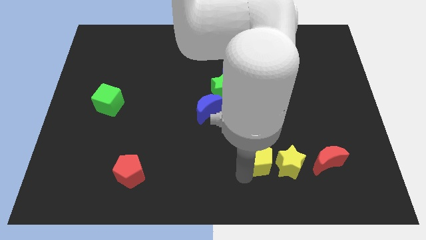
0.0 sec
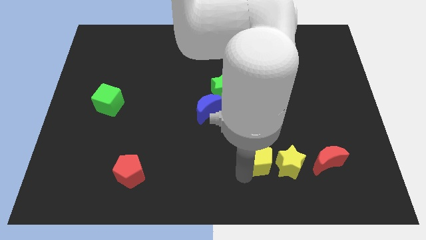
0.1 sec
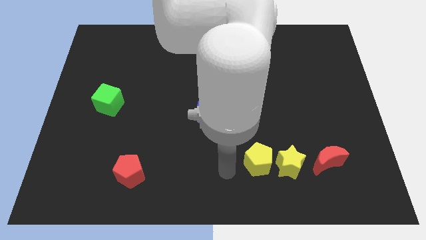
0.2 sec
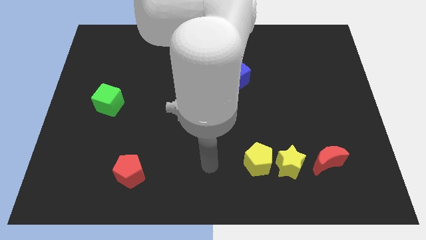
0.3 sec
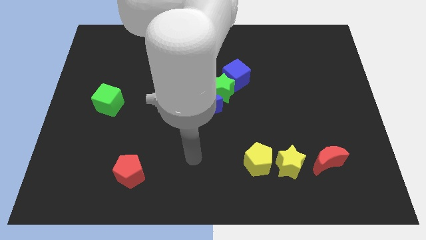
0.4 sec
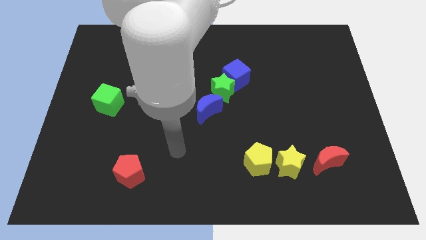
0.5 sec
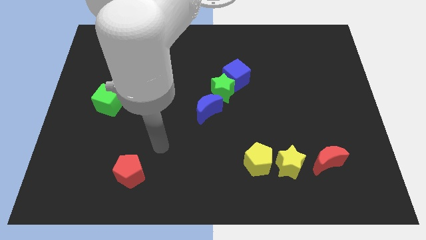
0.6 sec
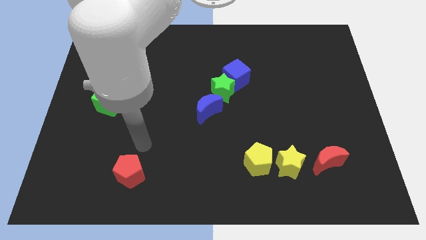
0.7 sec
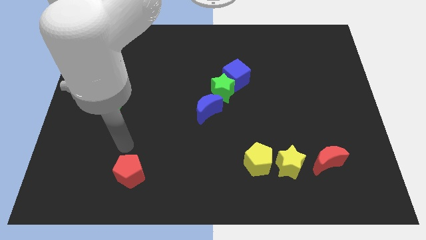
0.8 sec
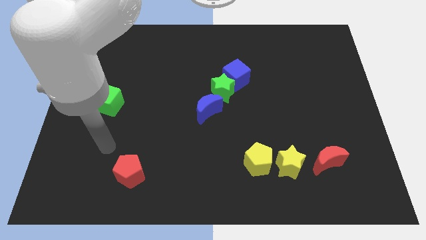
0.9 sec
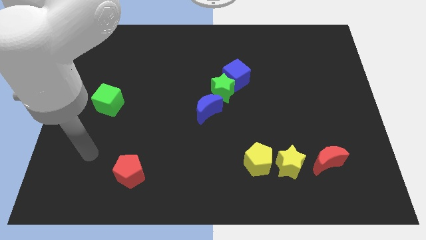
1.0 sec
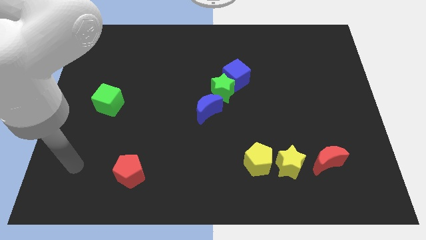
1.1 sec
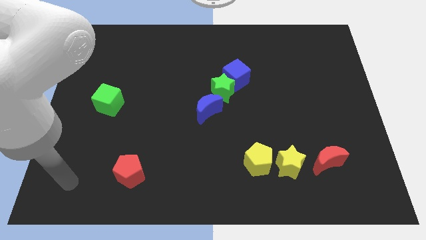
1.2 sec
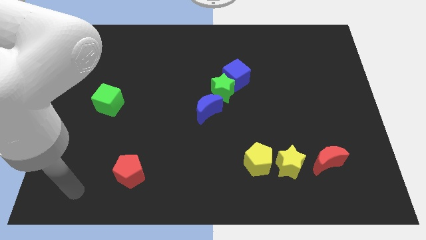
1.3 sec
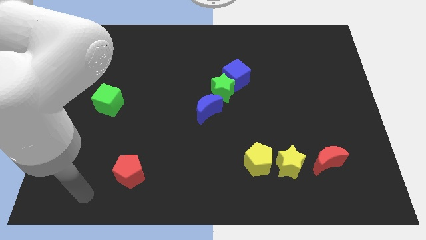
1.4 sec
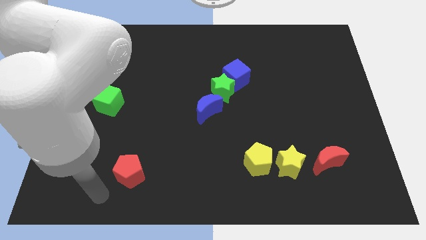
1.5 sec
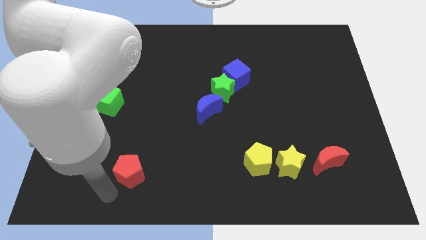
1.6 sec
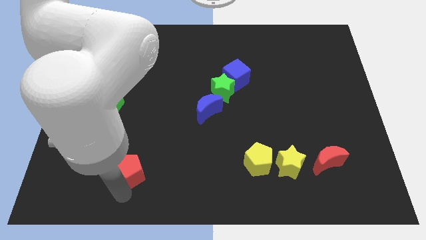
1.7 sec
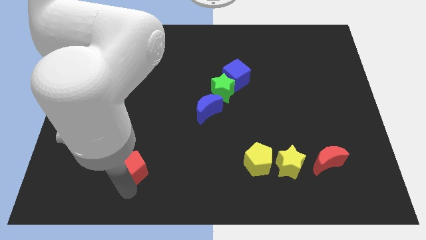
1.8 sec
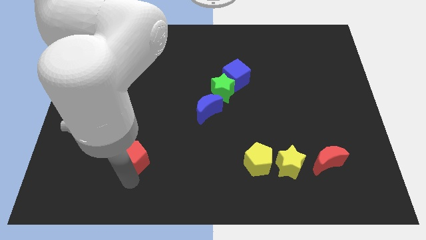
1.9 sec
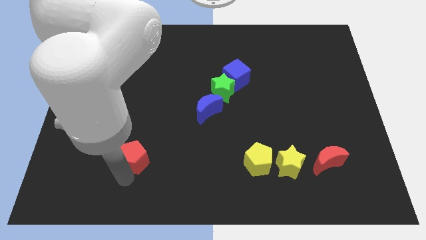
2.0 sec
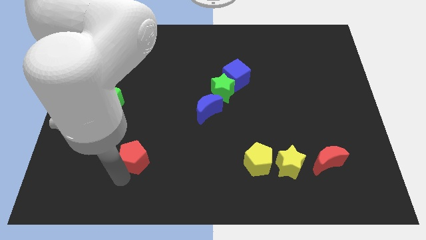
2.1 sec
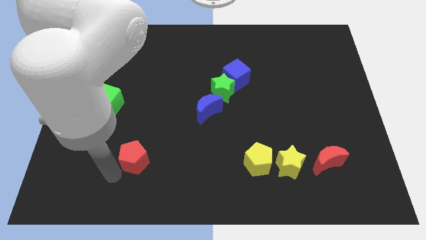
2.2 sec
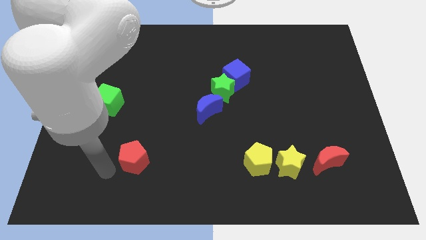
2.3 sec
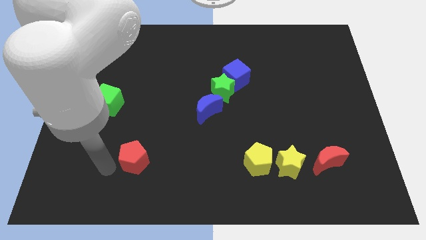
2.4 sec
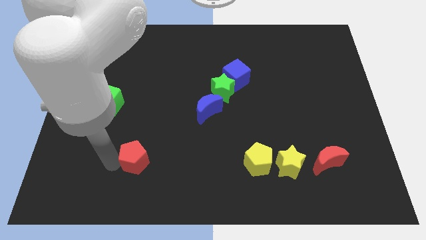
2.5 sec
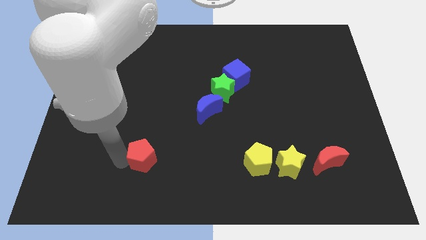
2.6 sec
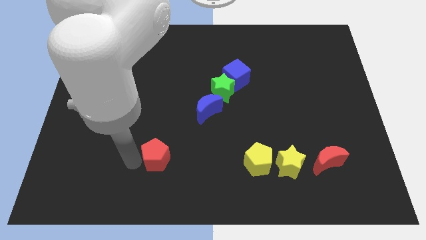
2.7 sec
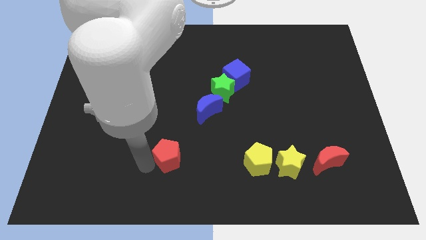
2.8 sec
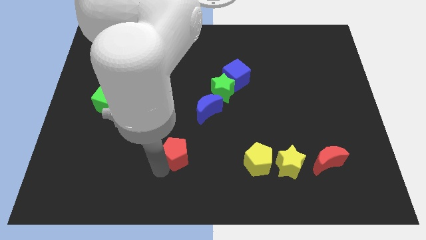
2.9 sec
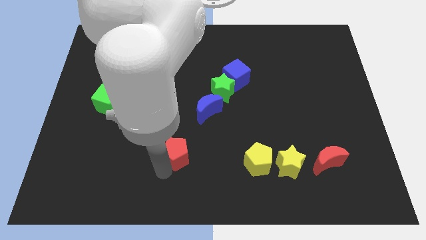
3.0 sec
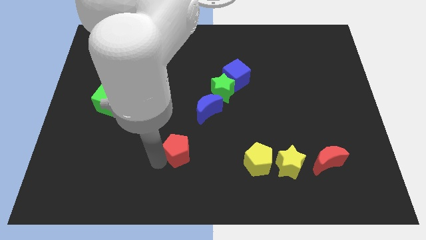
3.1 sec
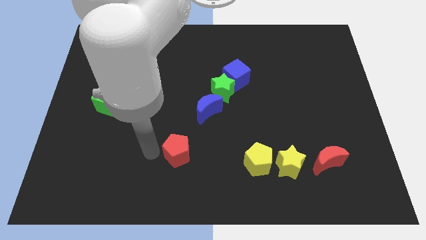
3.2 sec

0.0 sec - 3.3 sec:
push the red pentagon towards the yellow pentagon

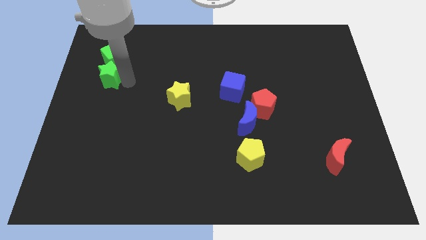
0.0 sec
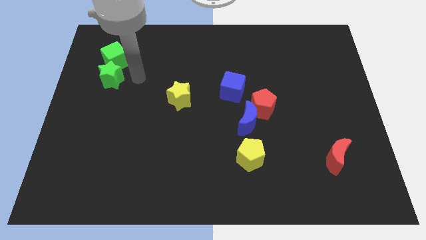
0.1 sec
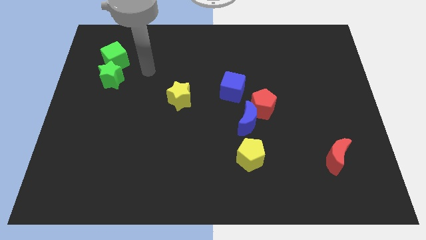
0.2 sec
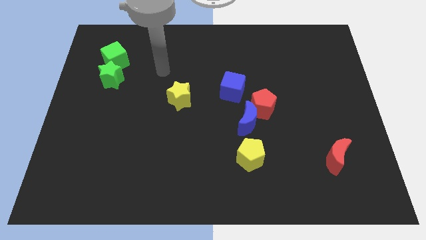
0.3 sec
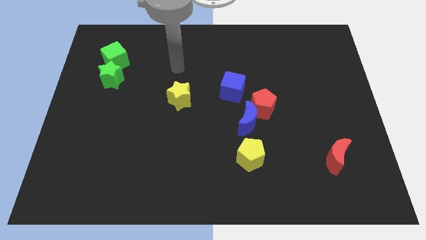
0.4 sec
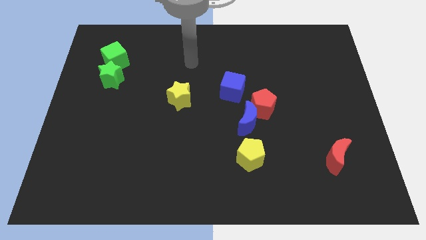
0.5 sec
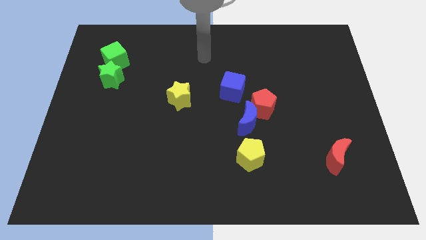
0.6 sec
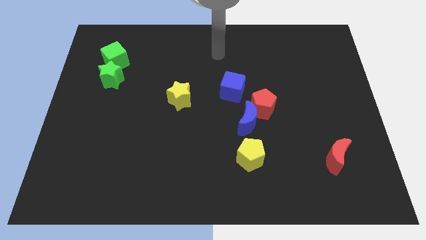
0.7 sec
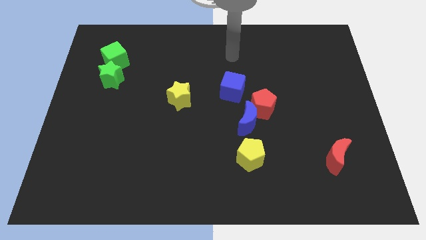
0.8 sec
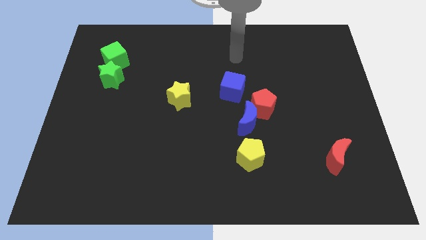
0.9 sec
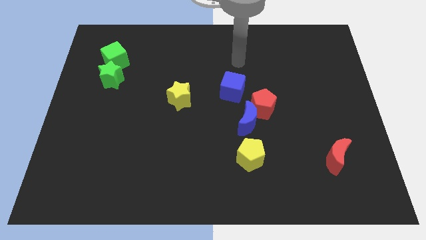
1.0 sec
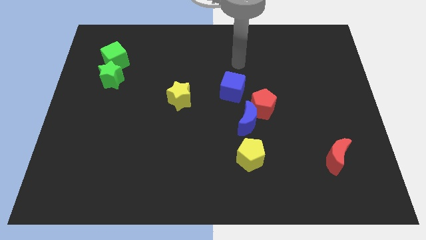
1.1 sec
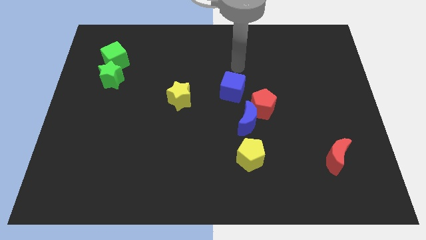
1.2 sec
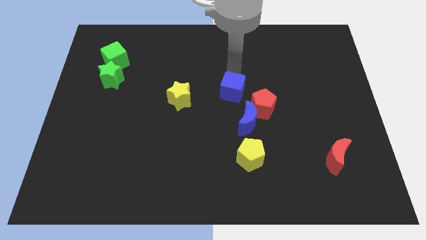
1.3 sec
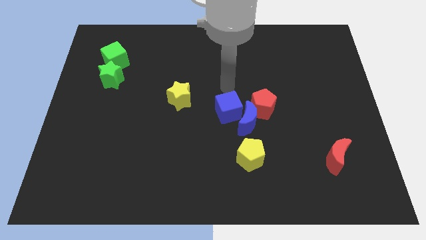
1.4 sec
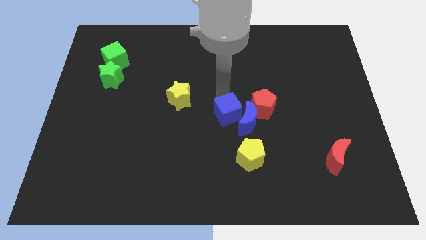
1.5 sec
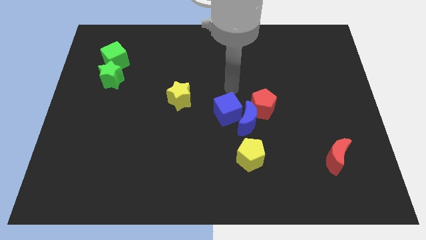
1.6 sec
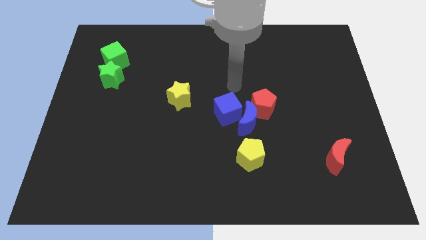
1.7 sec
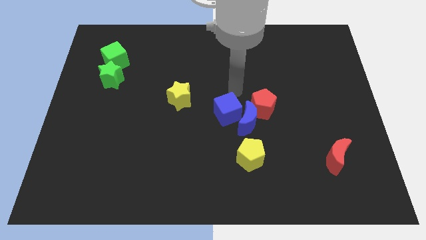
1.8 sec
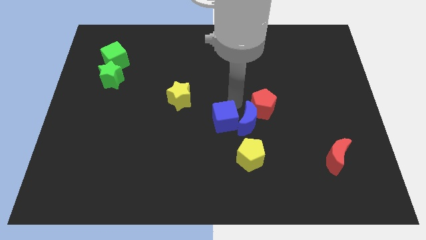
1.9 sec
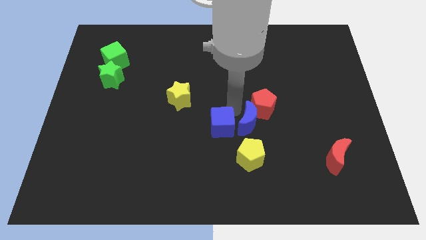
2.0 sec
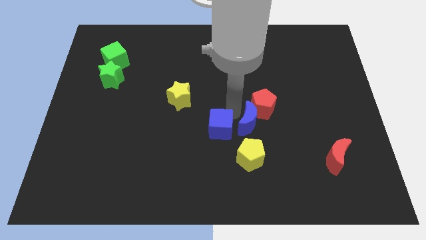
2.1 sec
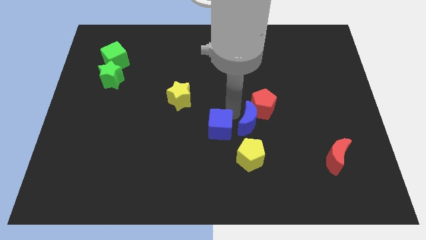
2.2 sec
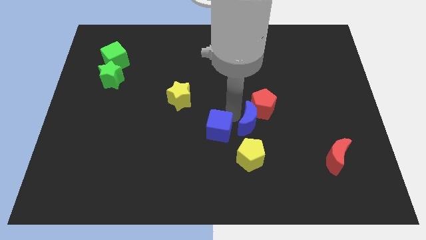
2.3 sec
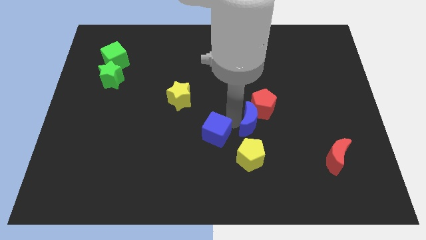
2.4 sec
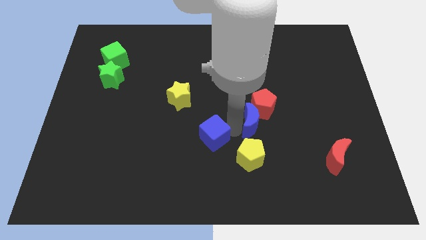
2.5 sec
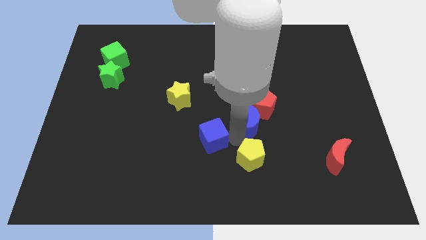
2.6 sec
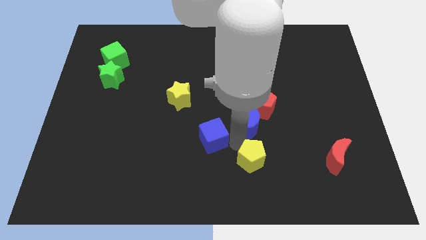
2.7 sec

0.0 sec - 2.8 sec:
place blue cube to the left of blue crescent

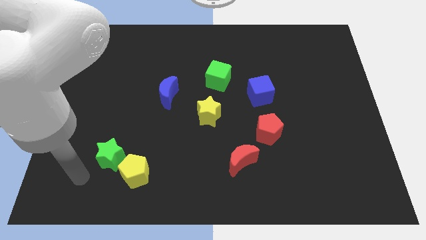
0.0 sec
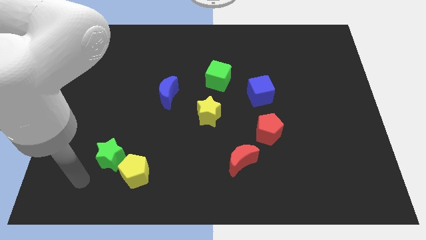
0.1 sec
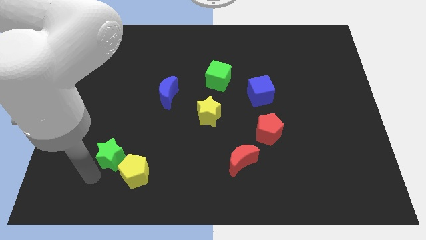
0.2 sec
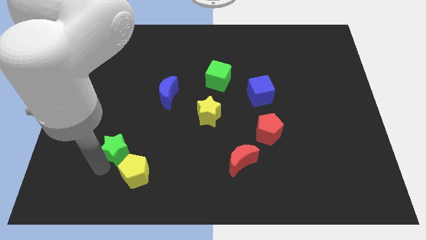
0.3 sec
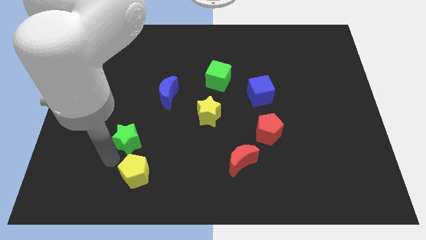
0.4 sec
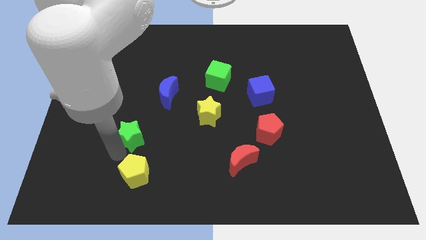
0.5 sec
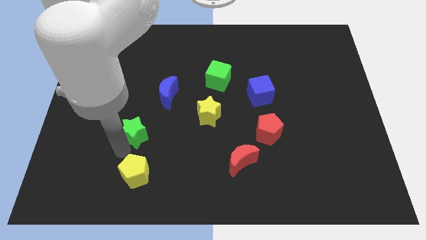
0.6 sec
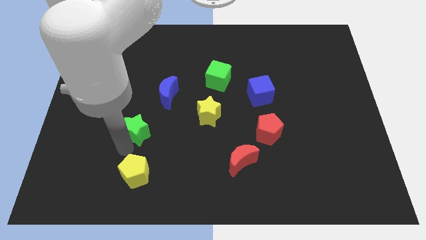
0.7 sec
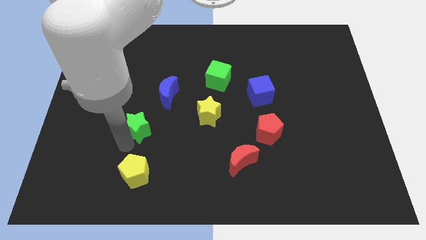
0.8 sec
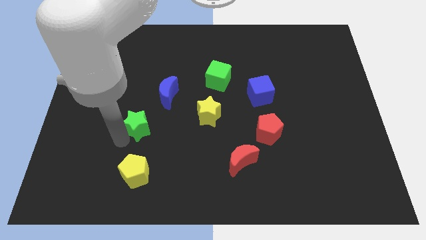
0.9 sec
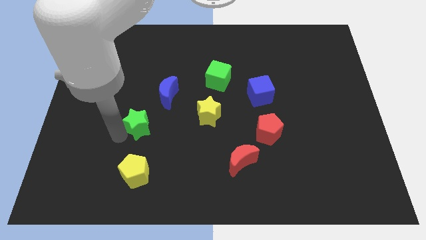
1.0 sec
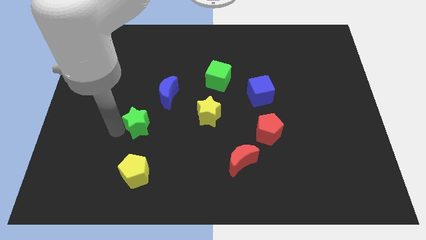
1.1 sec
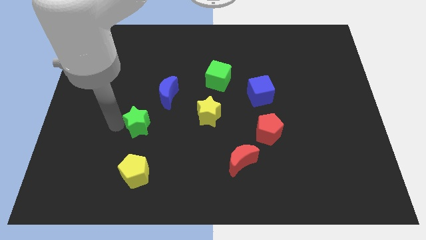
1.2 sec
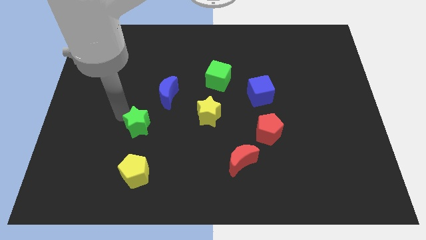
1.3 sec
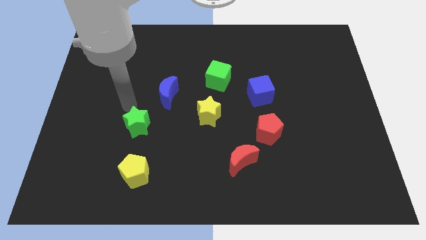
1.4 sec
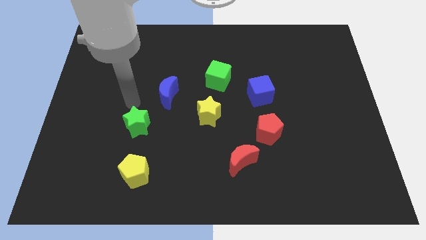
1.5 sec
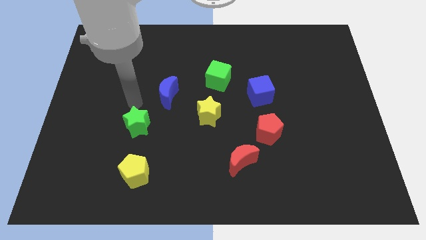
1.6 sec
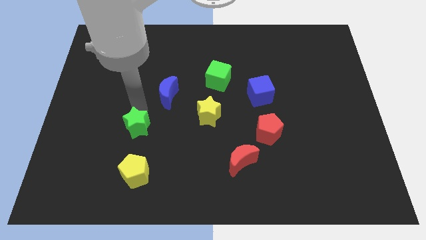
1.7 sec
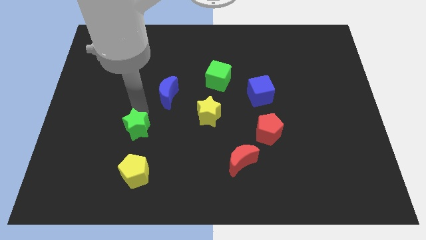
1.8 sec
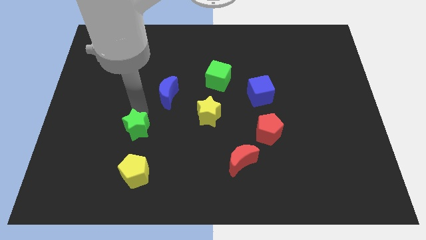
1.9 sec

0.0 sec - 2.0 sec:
separate green star from the yellow pentagon

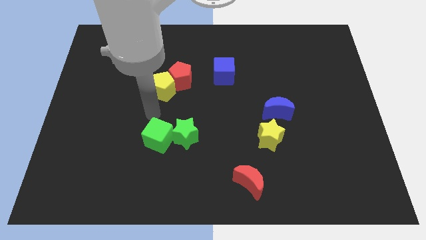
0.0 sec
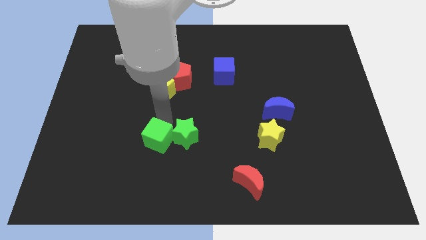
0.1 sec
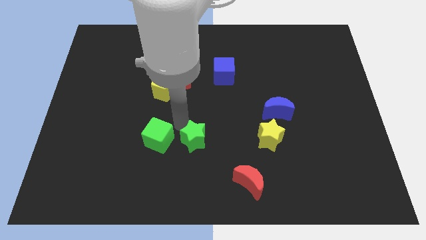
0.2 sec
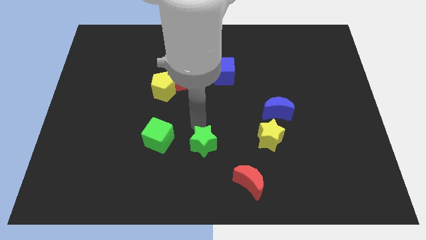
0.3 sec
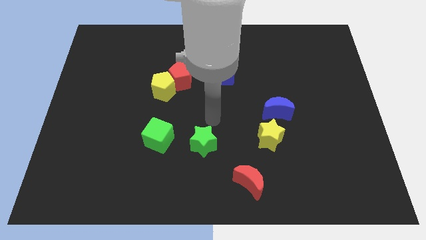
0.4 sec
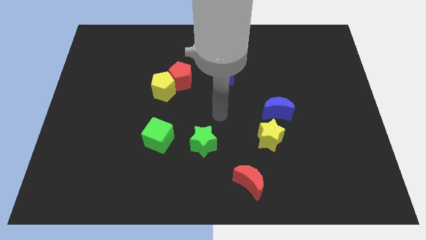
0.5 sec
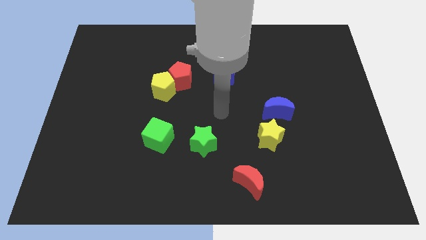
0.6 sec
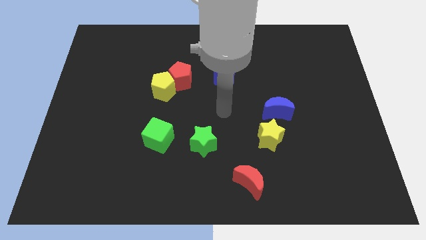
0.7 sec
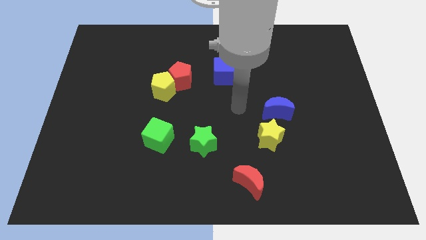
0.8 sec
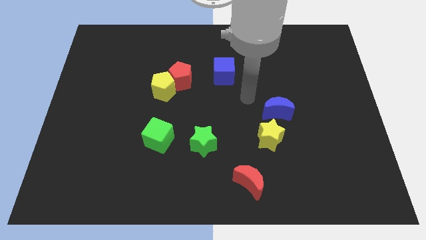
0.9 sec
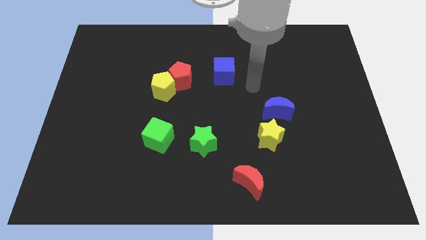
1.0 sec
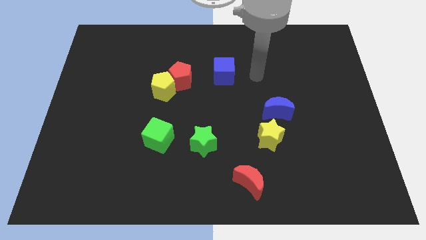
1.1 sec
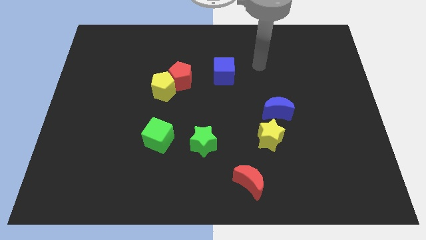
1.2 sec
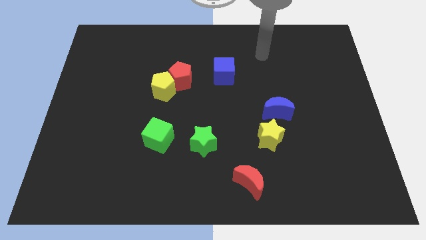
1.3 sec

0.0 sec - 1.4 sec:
move slightly green star to the center
